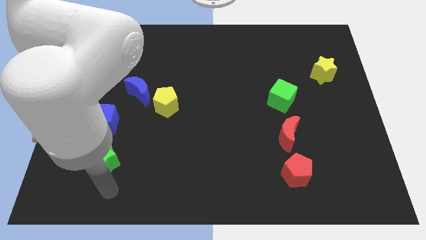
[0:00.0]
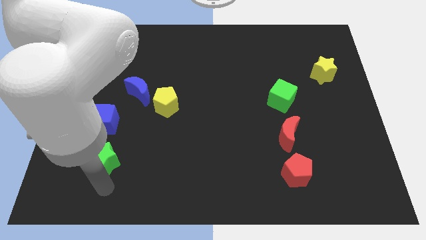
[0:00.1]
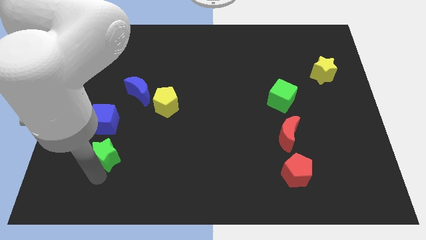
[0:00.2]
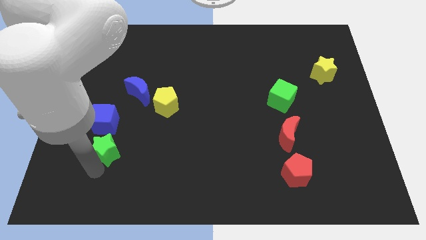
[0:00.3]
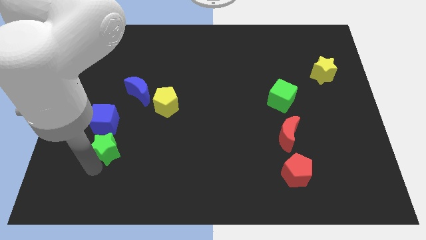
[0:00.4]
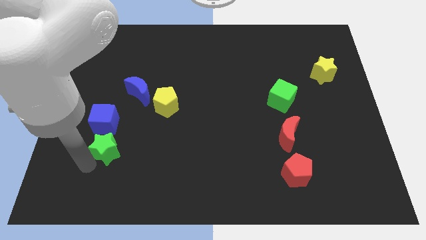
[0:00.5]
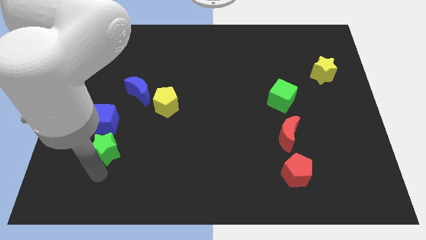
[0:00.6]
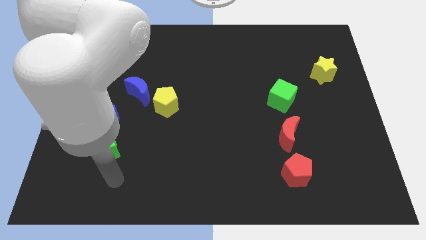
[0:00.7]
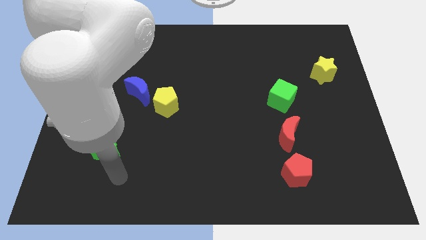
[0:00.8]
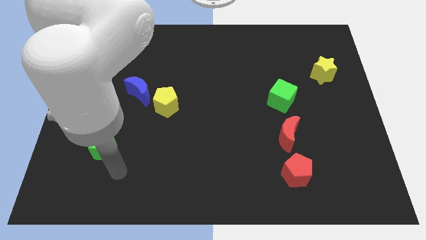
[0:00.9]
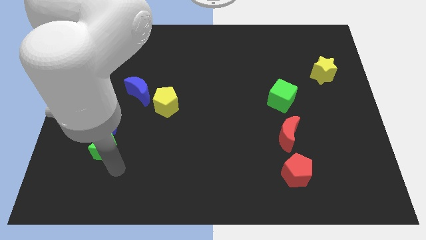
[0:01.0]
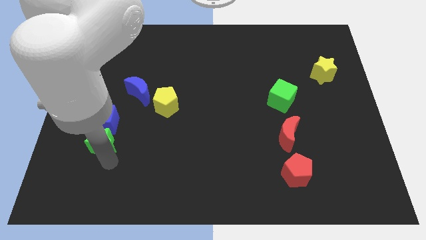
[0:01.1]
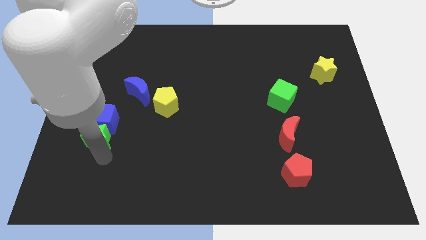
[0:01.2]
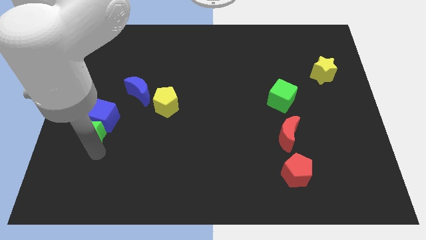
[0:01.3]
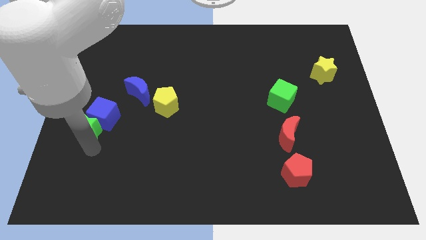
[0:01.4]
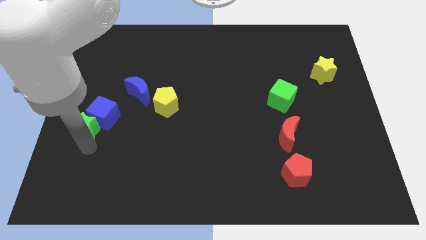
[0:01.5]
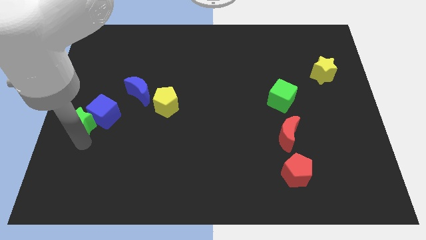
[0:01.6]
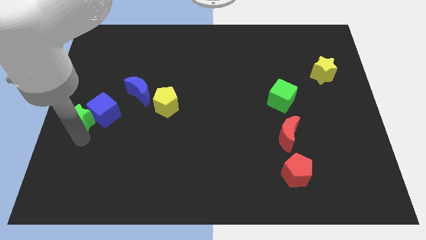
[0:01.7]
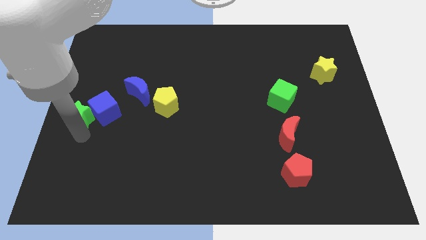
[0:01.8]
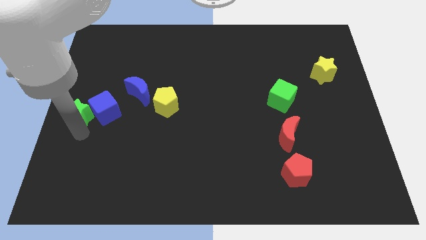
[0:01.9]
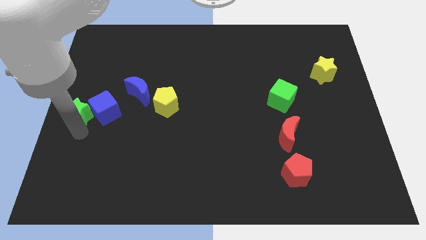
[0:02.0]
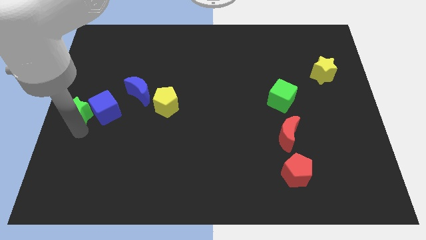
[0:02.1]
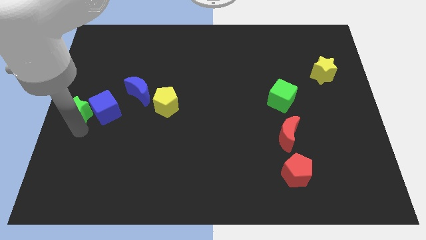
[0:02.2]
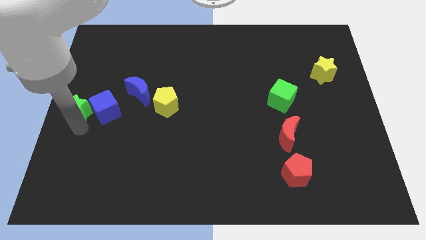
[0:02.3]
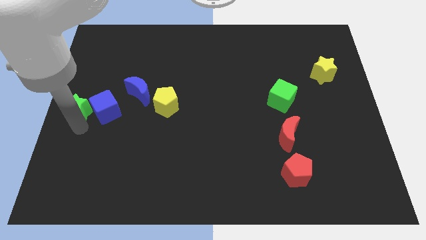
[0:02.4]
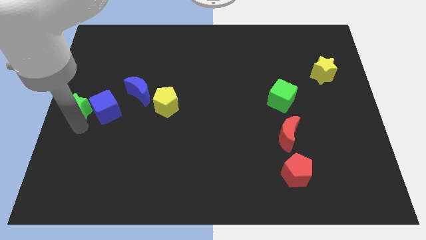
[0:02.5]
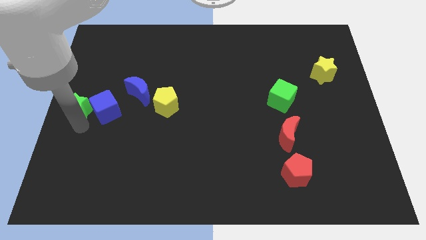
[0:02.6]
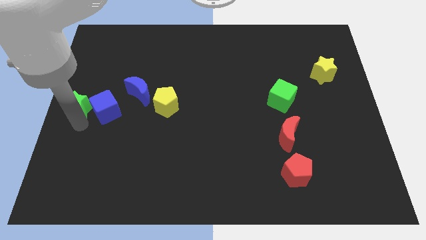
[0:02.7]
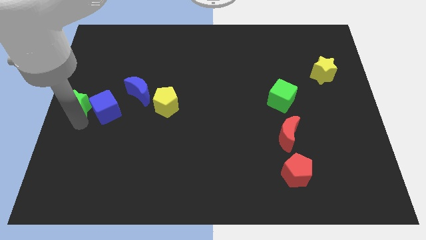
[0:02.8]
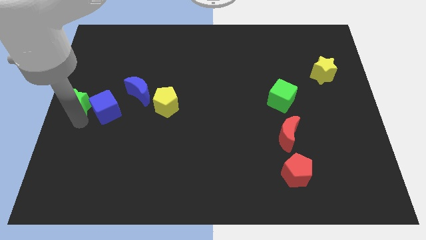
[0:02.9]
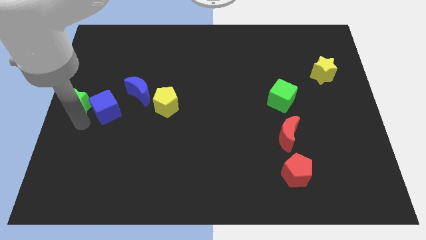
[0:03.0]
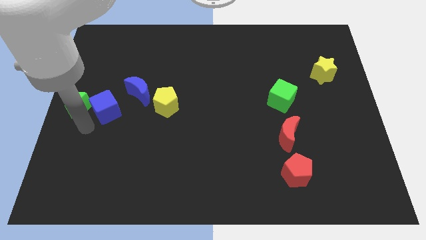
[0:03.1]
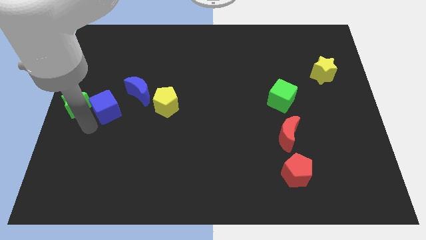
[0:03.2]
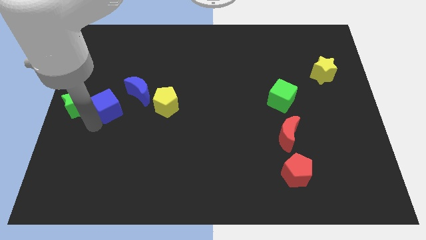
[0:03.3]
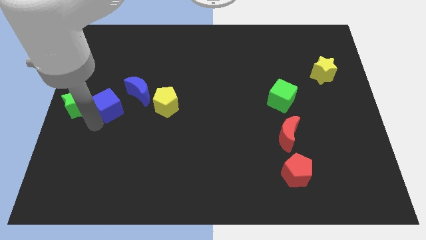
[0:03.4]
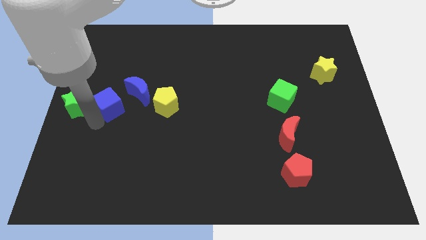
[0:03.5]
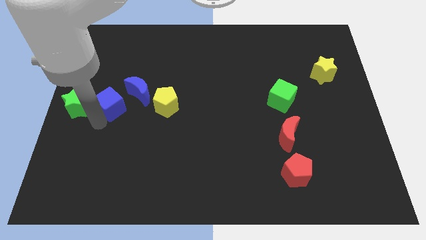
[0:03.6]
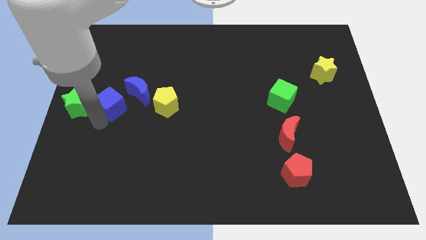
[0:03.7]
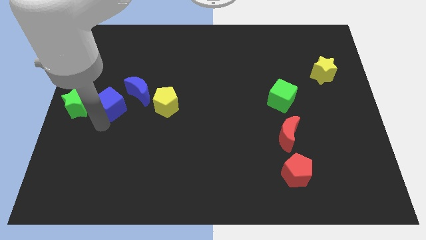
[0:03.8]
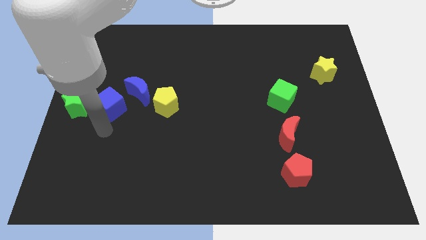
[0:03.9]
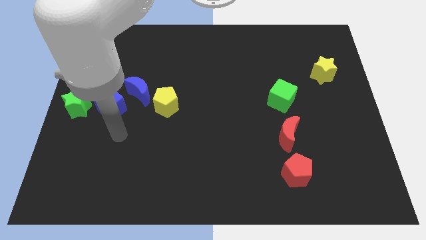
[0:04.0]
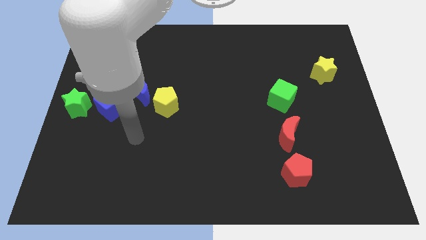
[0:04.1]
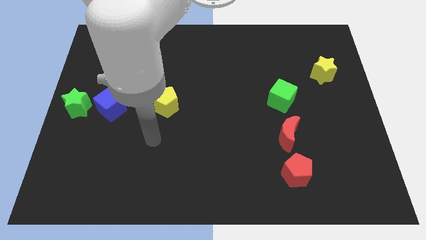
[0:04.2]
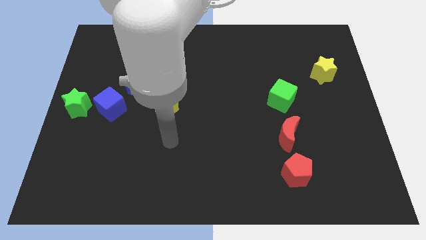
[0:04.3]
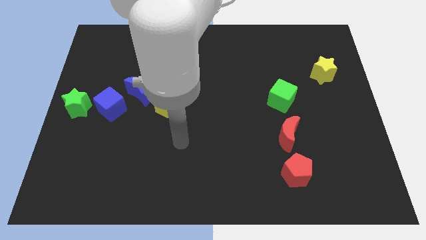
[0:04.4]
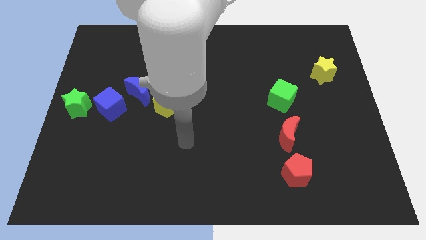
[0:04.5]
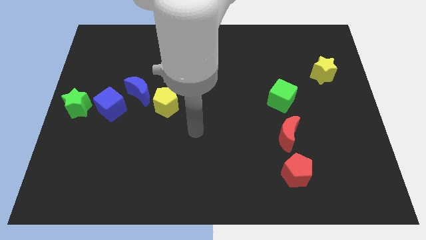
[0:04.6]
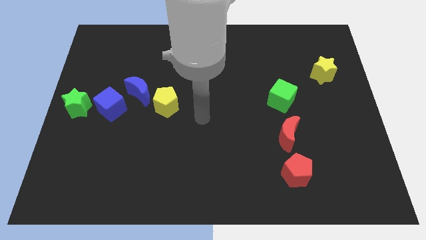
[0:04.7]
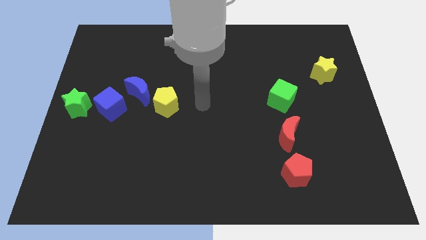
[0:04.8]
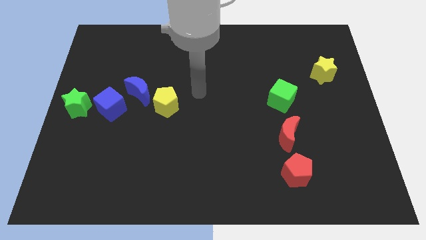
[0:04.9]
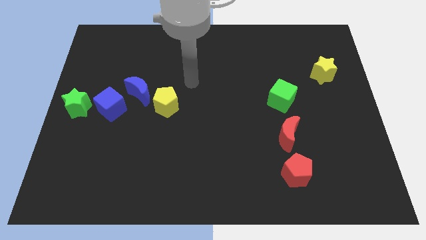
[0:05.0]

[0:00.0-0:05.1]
push the green star and blue cube to the left side of the board

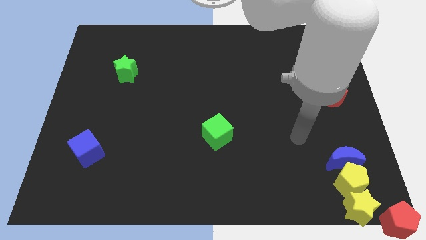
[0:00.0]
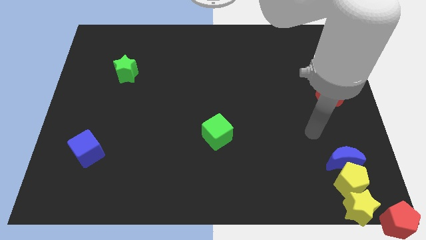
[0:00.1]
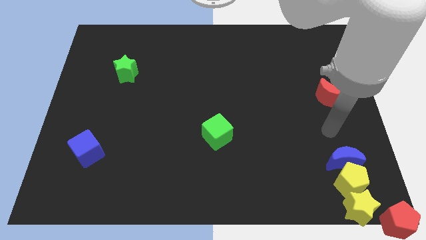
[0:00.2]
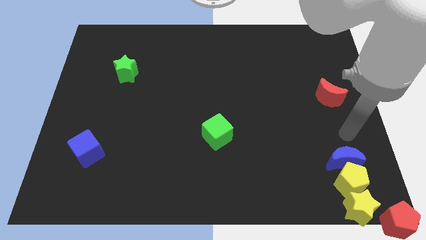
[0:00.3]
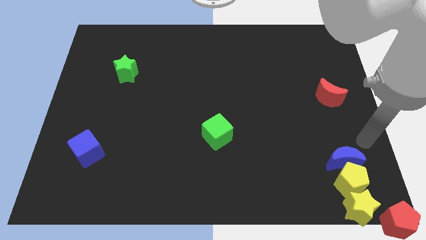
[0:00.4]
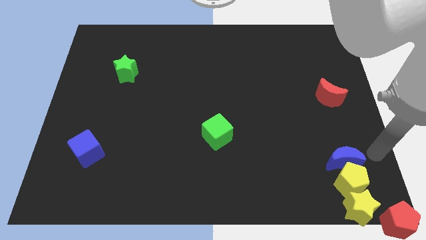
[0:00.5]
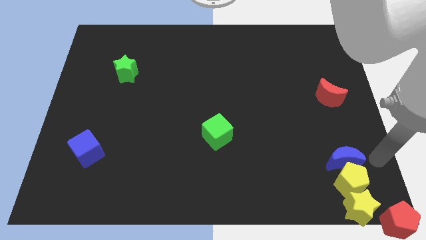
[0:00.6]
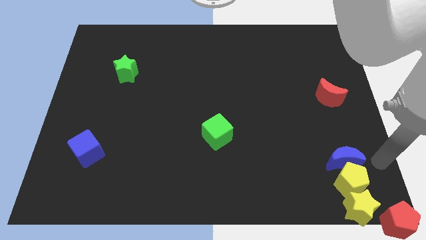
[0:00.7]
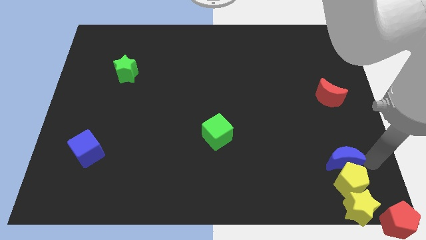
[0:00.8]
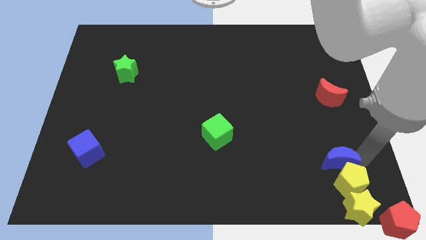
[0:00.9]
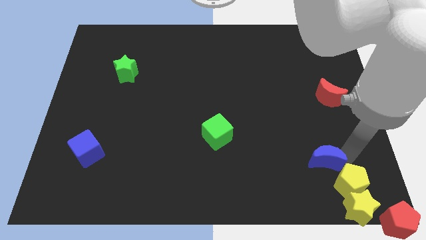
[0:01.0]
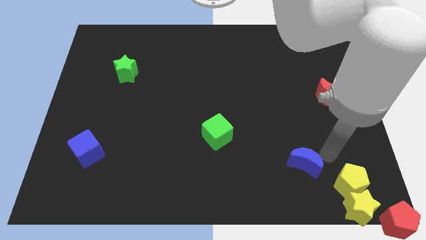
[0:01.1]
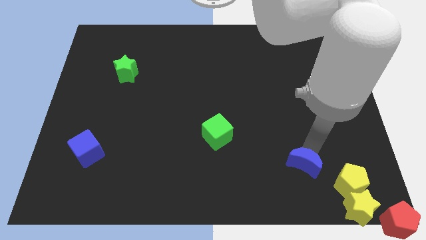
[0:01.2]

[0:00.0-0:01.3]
separate the blue crescent from the top of the yellow pentagon

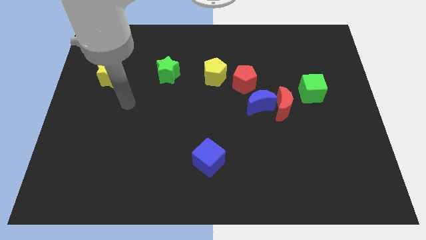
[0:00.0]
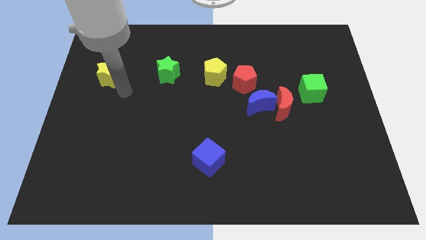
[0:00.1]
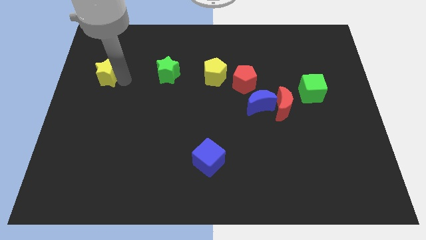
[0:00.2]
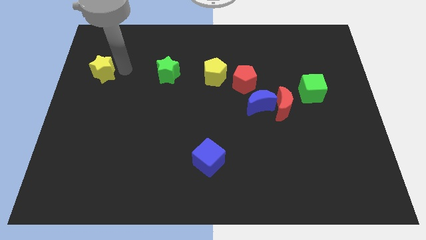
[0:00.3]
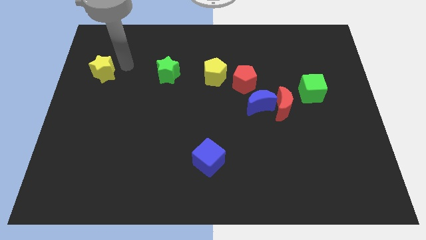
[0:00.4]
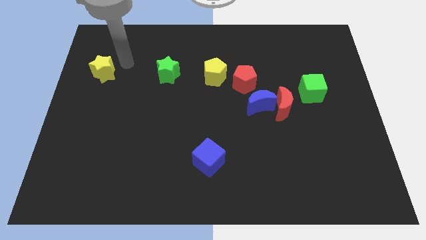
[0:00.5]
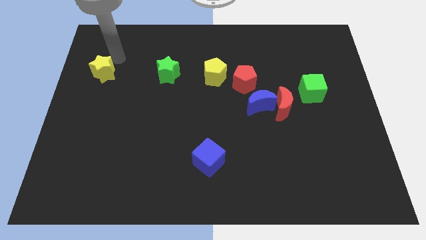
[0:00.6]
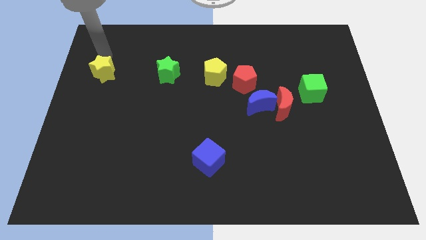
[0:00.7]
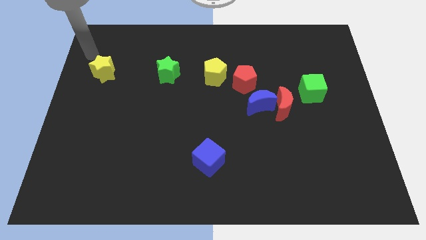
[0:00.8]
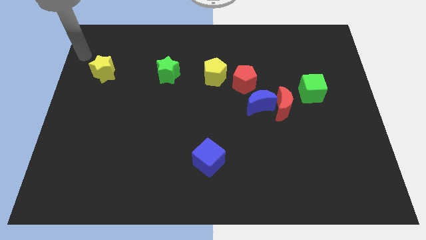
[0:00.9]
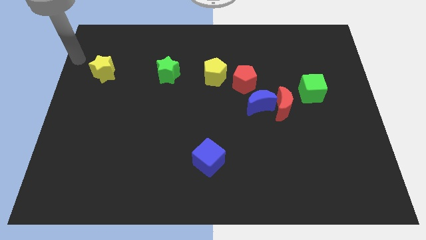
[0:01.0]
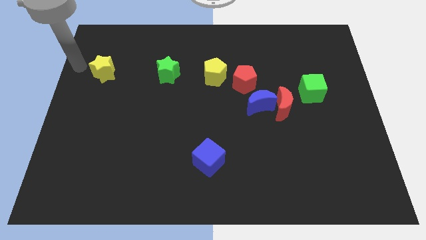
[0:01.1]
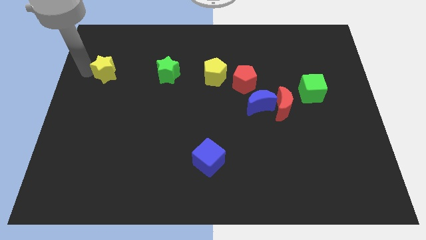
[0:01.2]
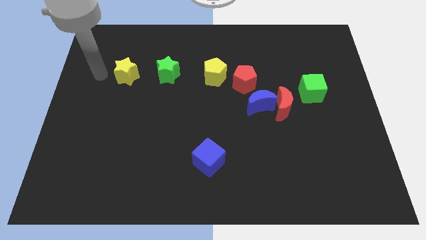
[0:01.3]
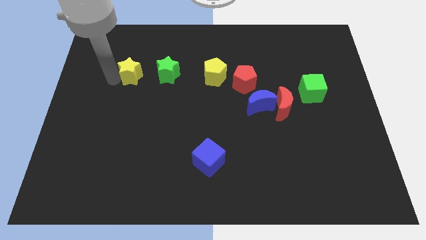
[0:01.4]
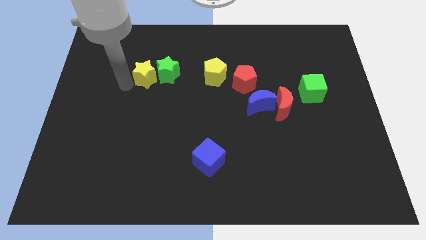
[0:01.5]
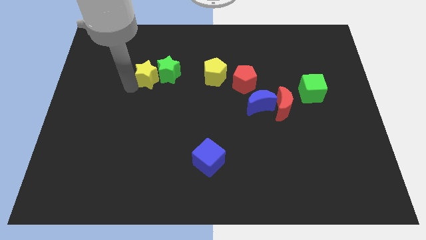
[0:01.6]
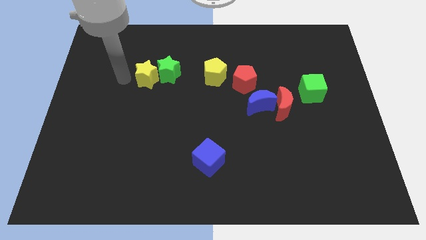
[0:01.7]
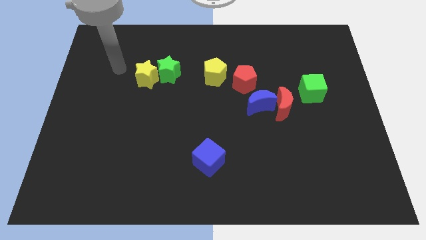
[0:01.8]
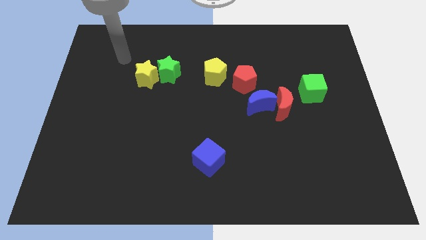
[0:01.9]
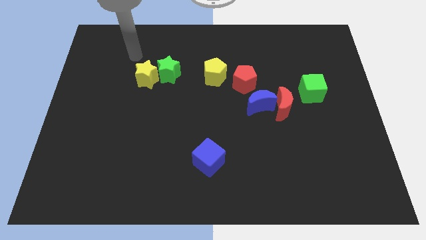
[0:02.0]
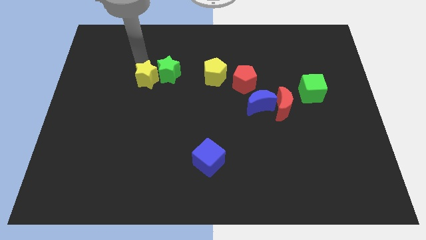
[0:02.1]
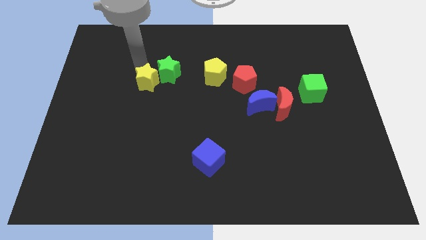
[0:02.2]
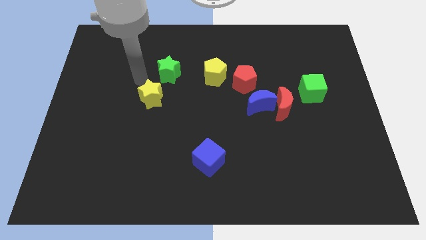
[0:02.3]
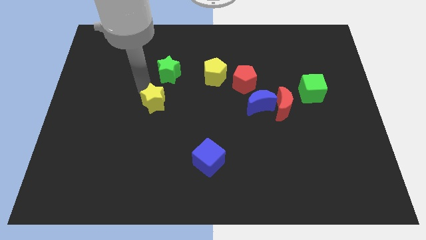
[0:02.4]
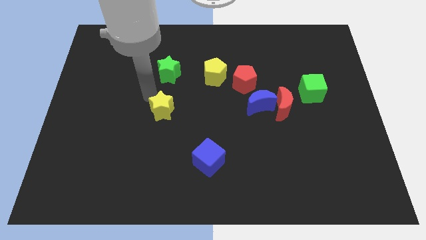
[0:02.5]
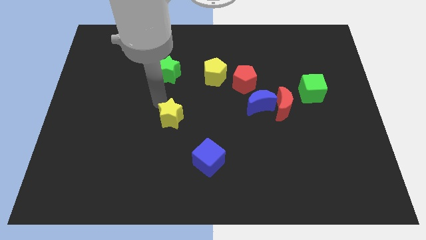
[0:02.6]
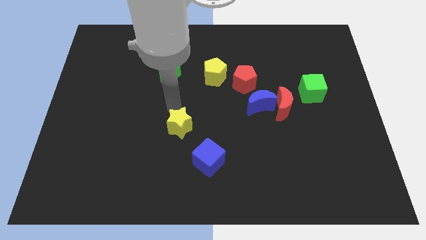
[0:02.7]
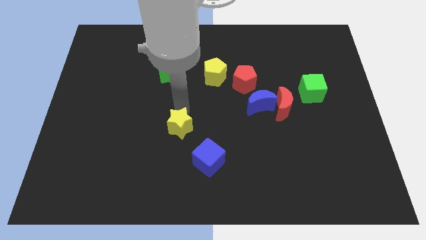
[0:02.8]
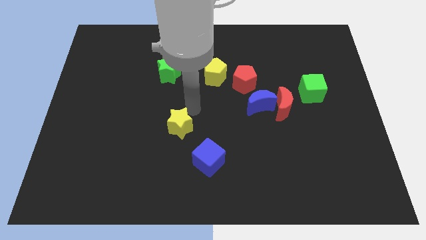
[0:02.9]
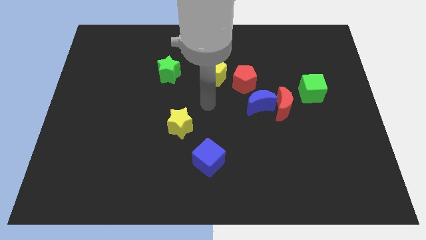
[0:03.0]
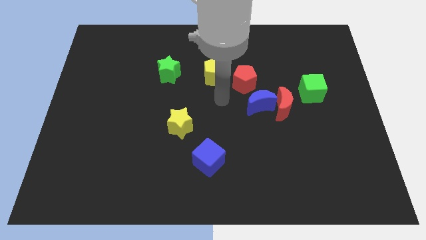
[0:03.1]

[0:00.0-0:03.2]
move the yellow star diagonal above blue cube
